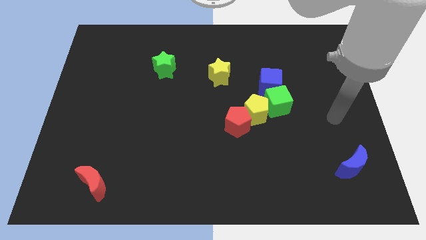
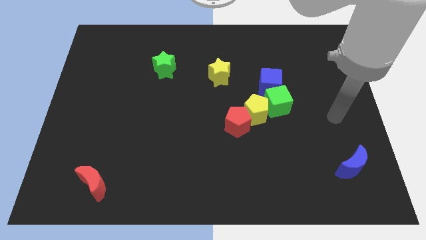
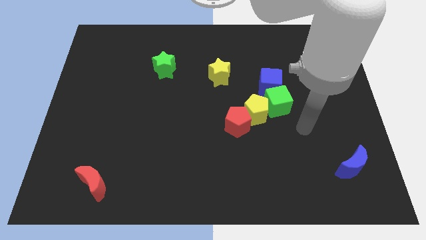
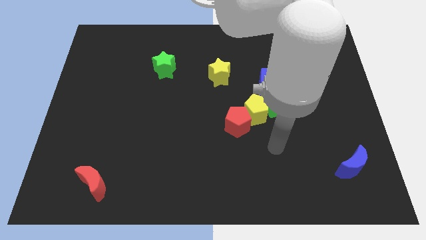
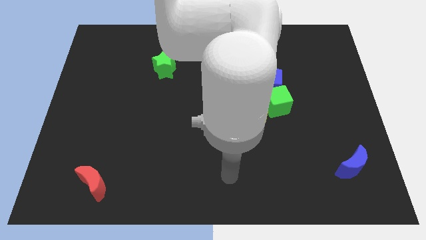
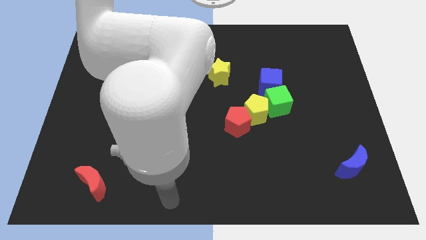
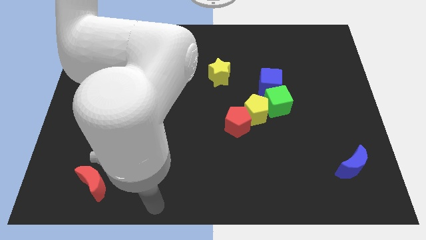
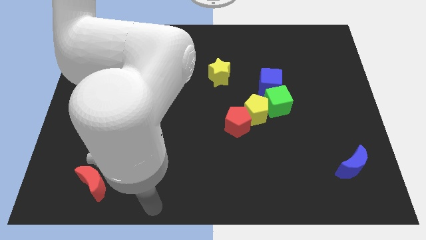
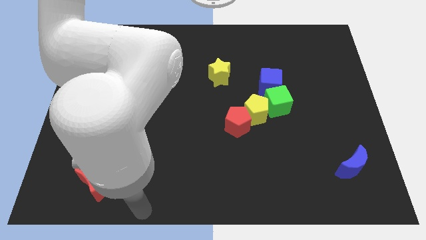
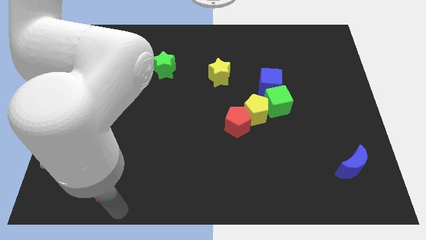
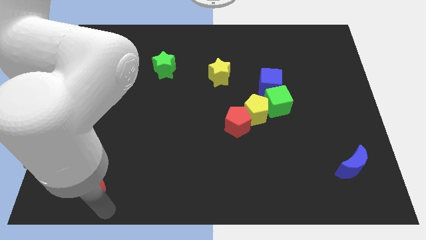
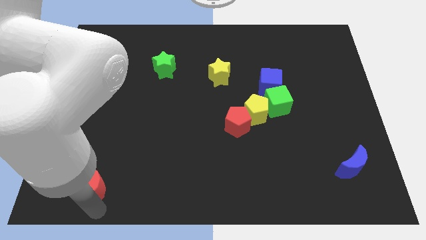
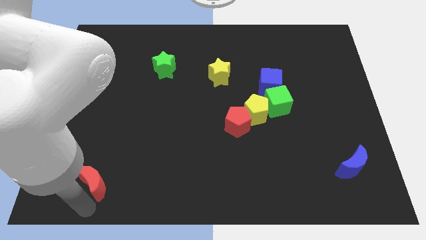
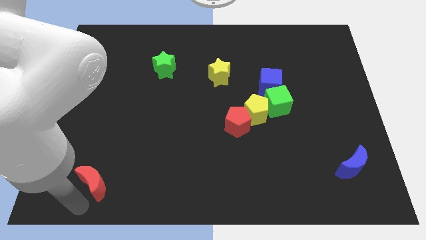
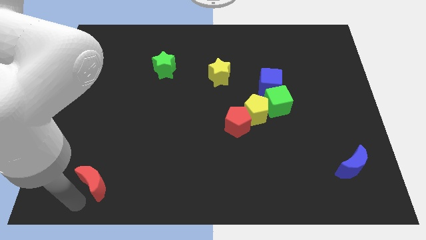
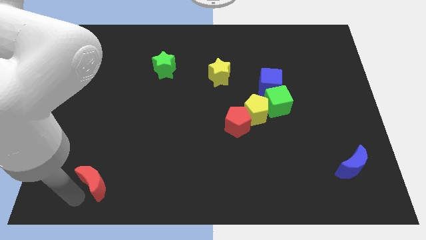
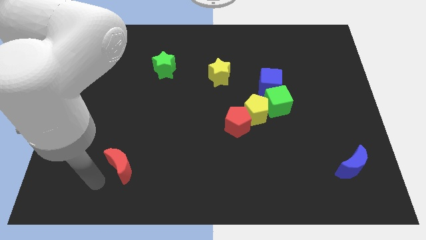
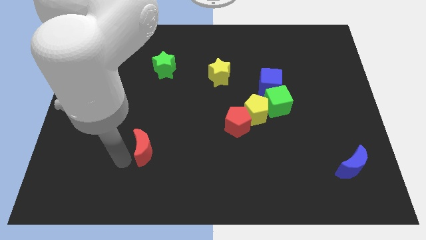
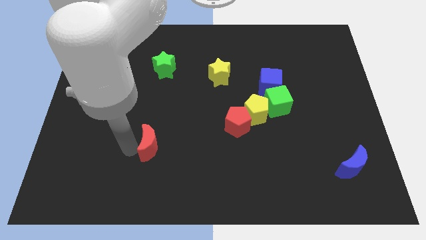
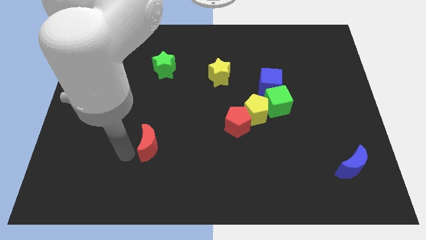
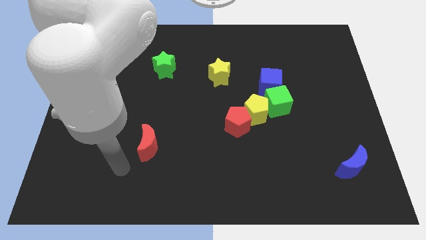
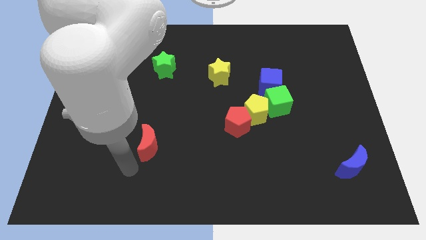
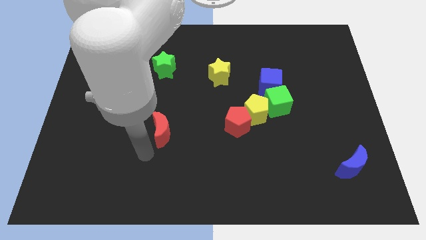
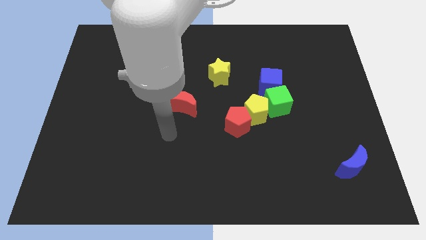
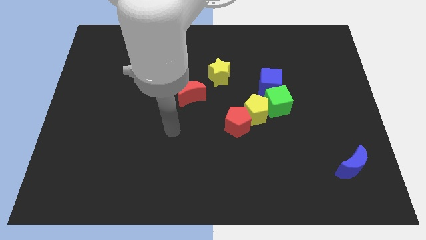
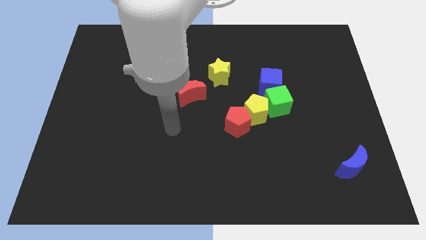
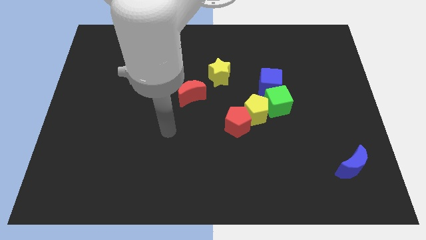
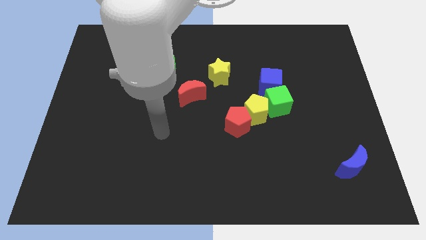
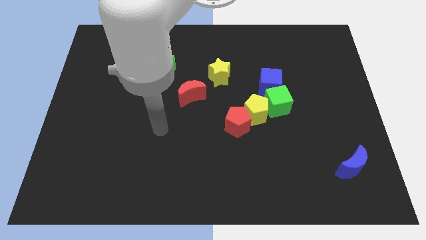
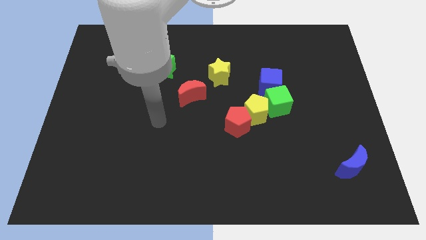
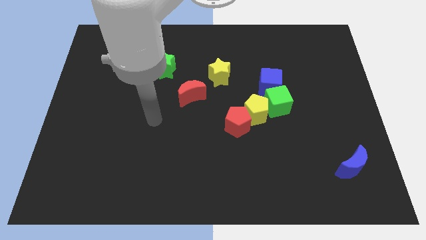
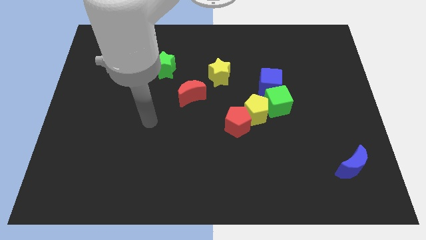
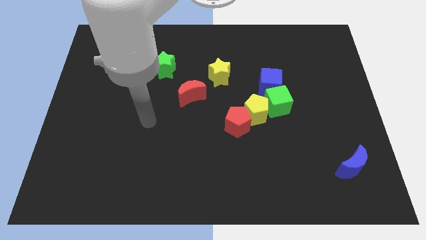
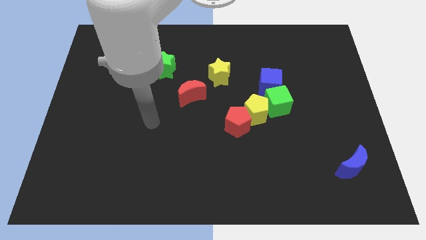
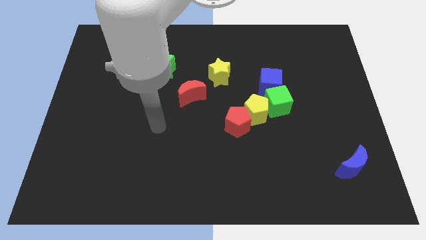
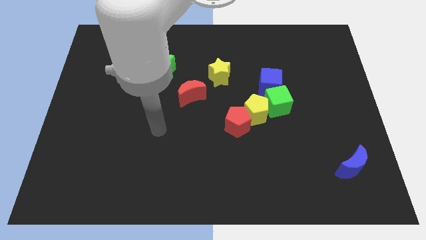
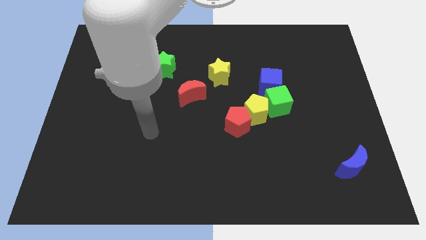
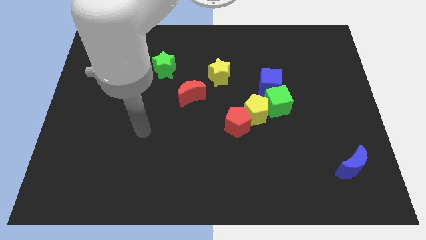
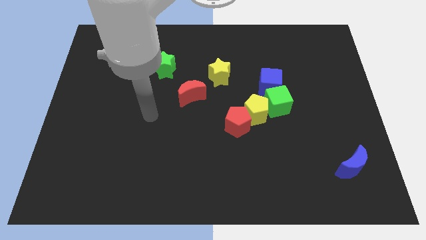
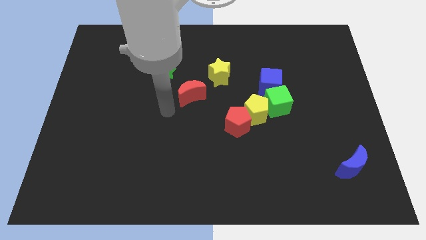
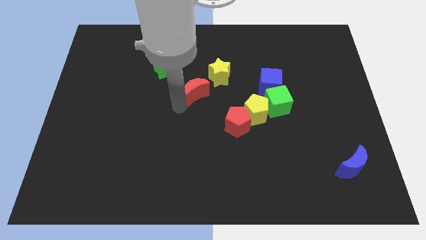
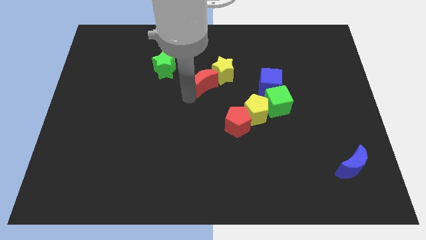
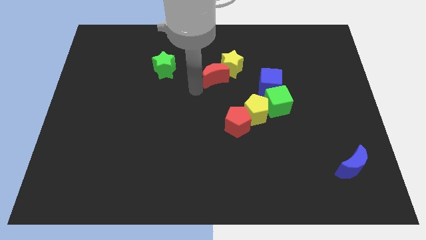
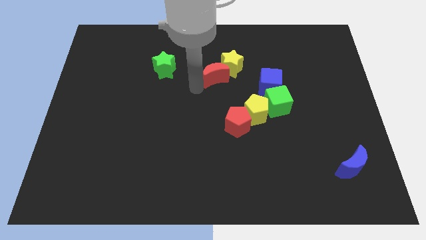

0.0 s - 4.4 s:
move the red moon next to the yellow star

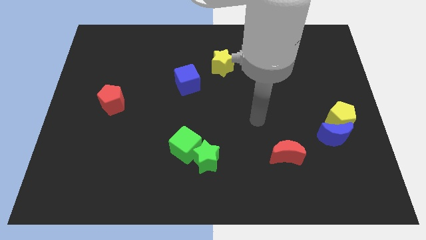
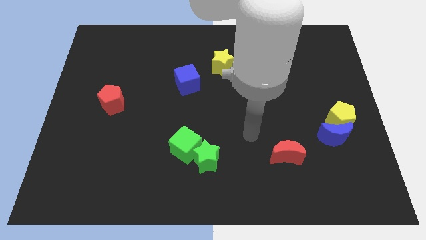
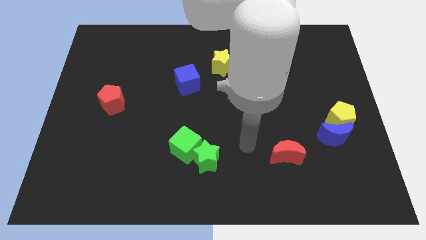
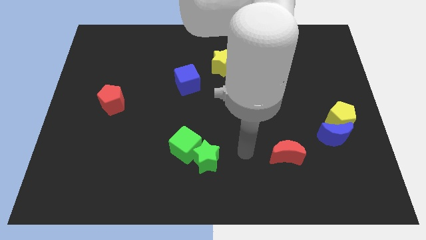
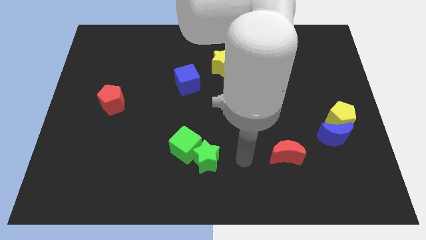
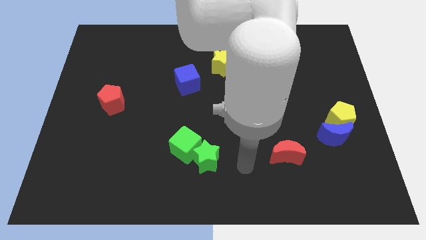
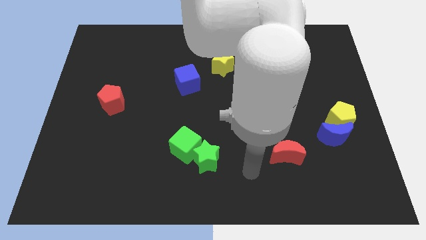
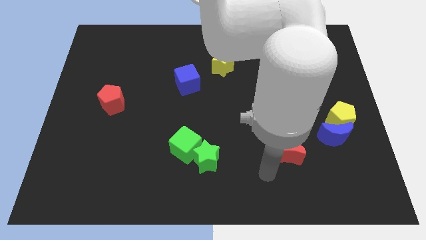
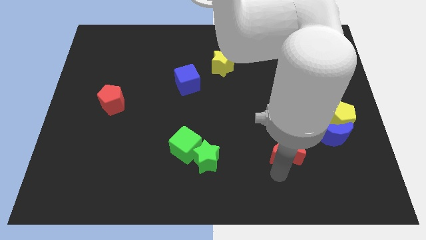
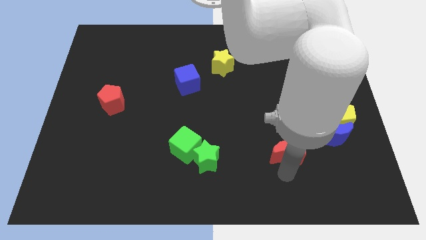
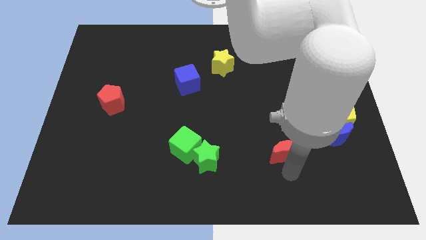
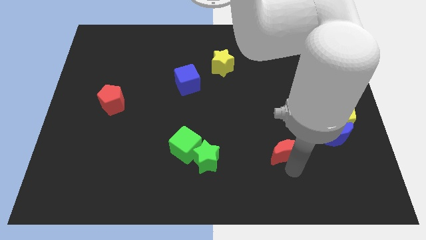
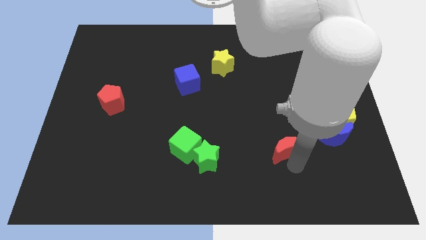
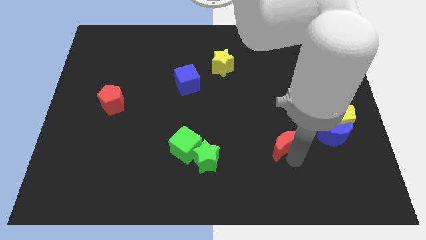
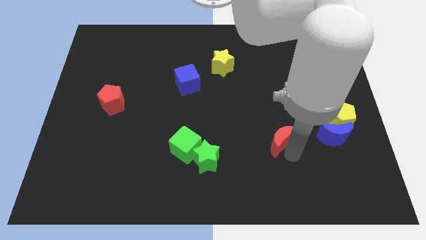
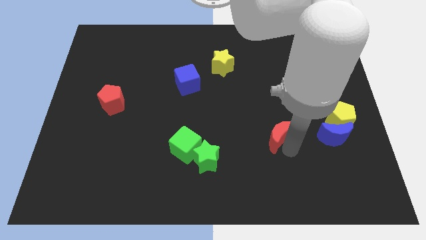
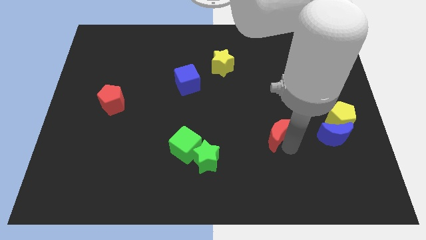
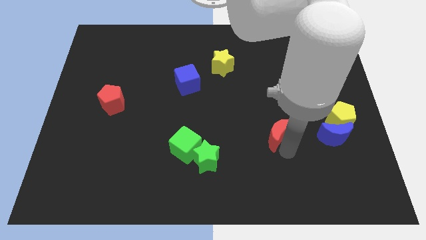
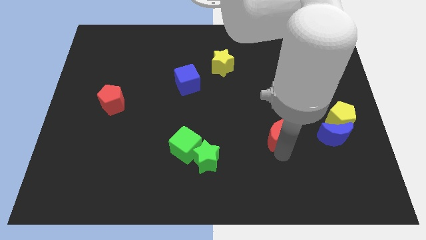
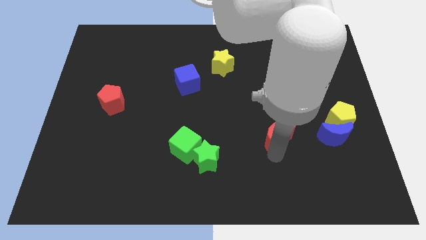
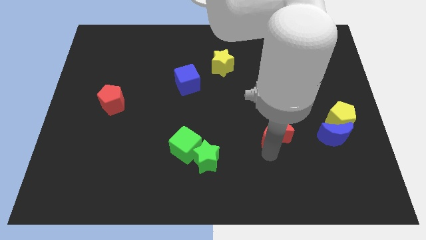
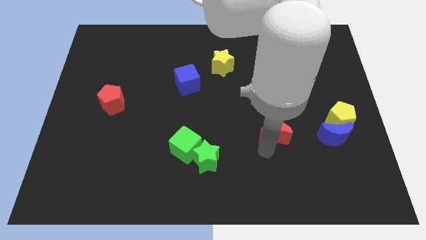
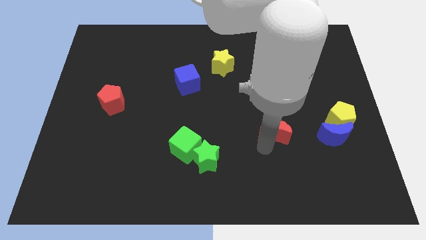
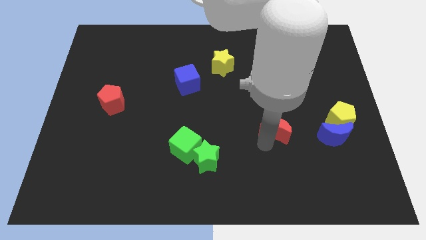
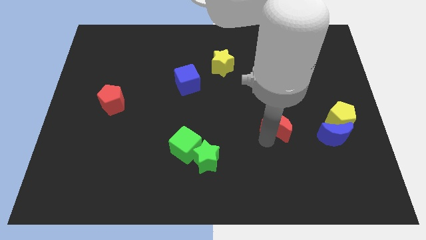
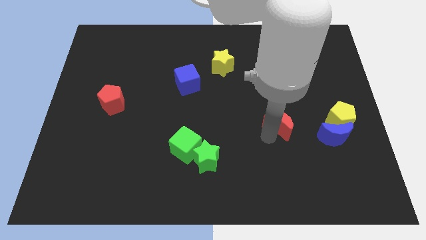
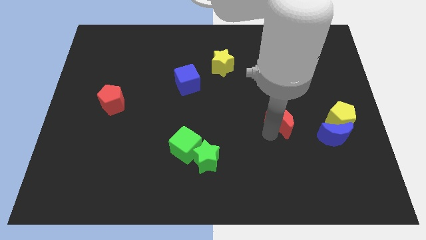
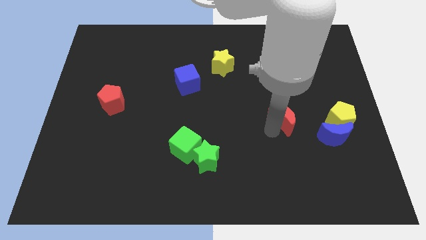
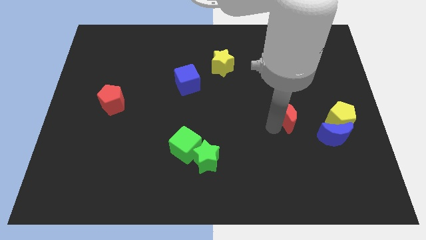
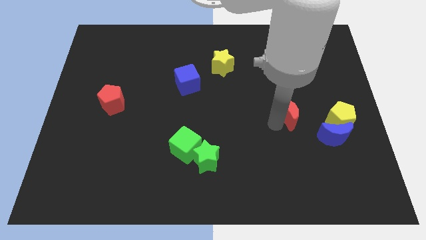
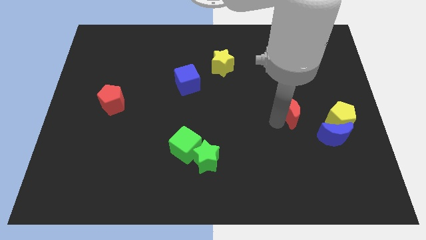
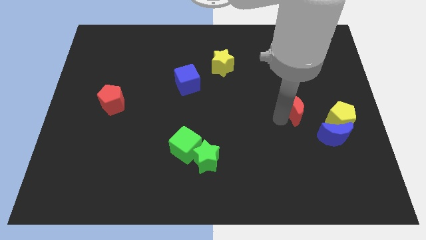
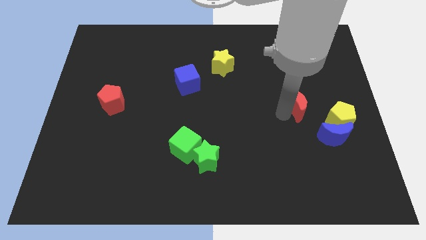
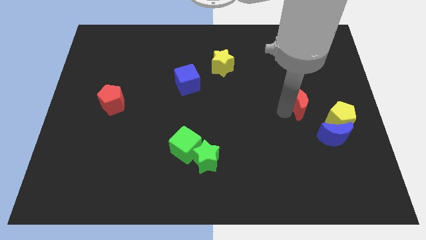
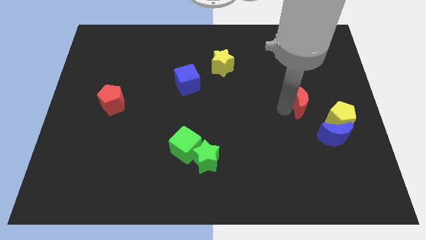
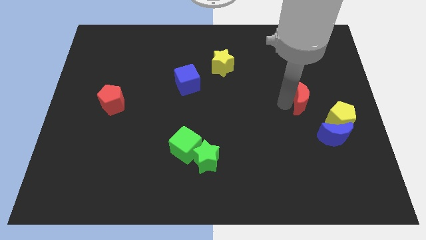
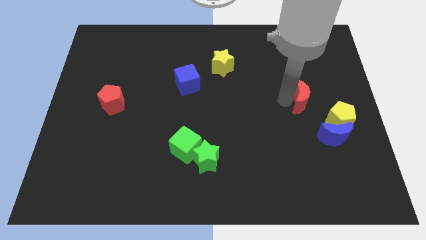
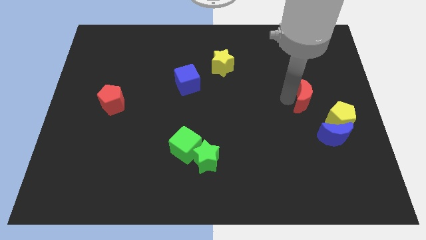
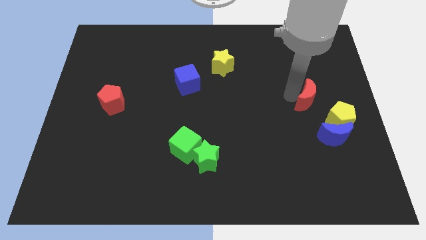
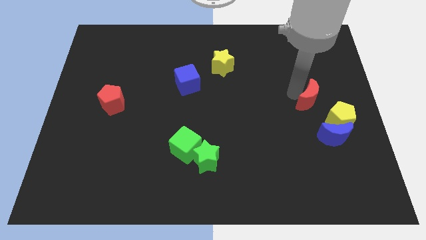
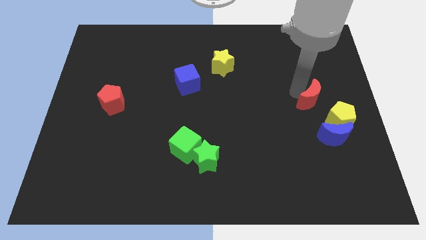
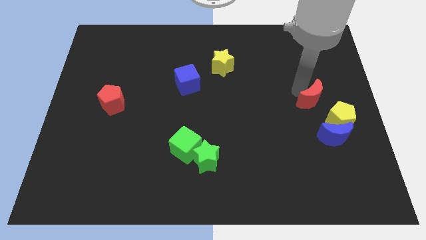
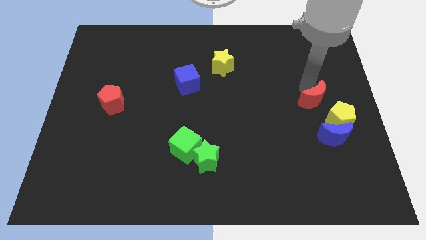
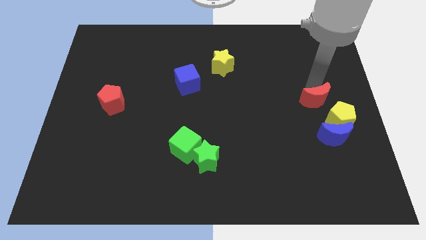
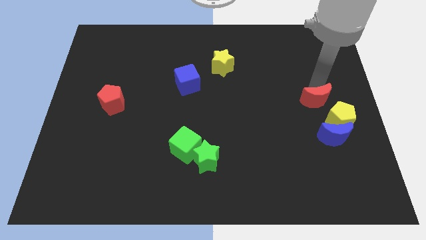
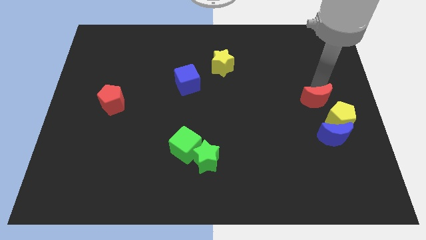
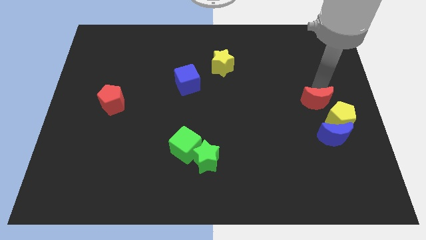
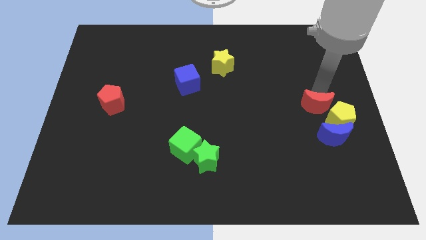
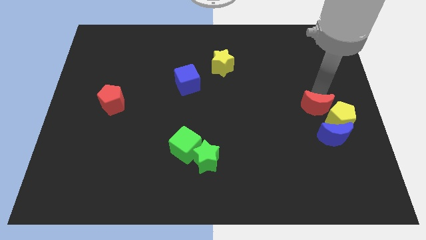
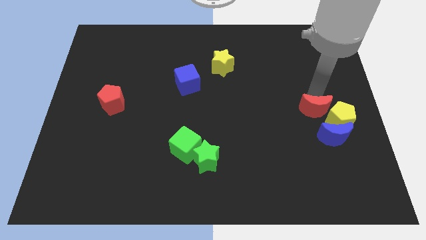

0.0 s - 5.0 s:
put the red moon next to the yellow pentagon
